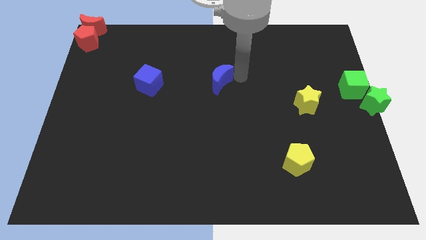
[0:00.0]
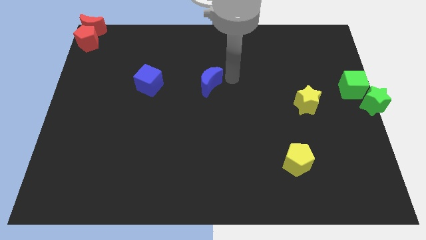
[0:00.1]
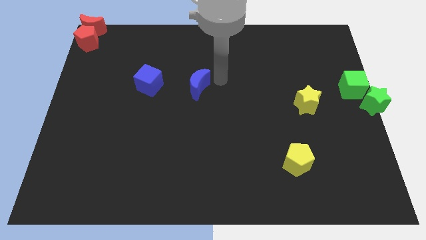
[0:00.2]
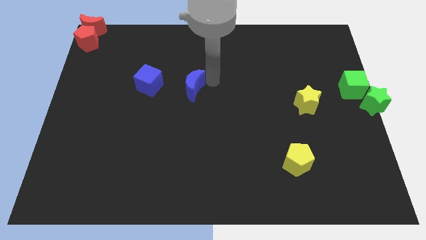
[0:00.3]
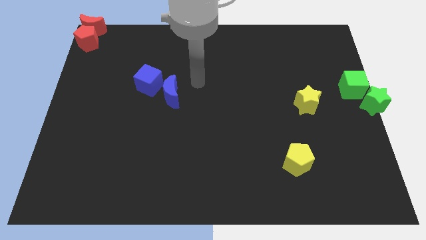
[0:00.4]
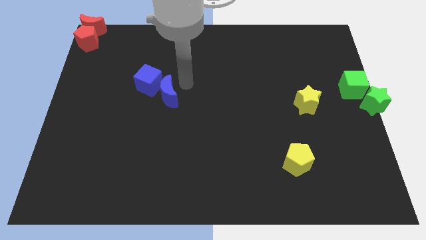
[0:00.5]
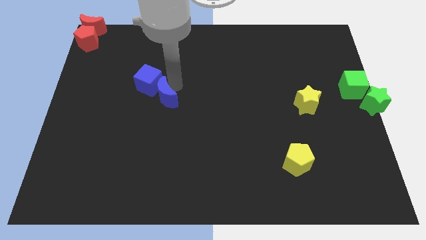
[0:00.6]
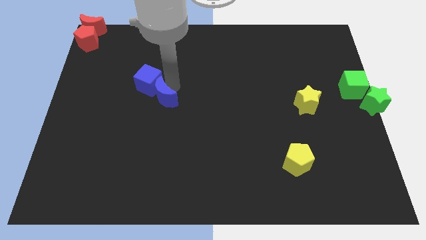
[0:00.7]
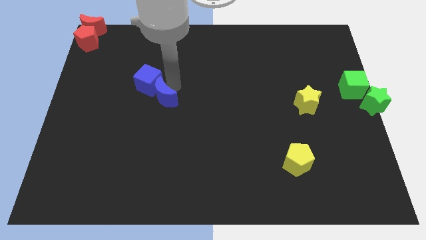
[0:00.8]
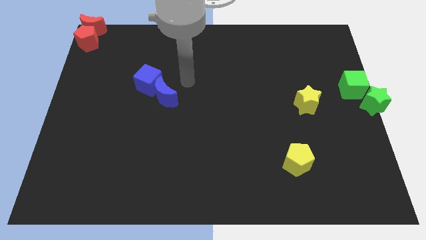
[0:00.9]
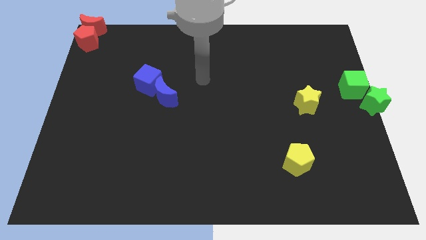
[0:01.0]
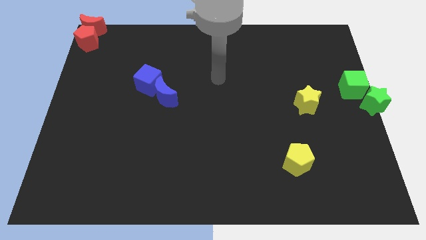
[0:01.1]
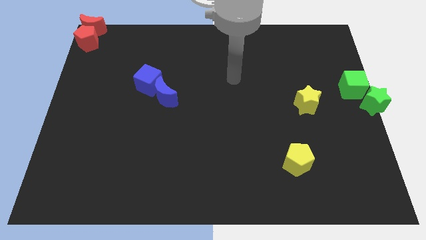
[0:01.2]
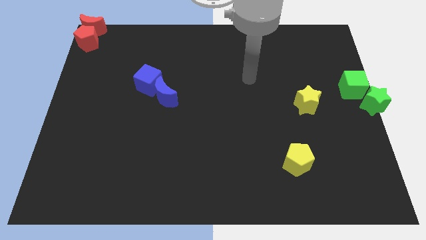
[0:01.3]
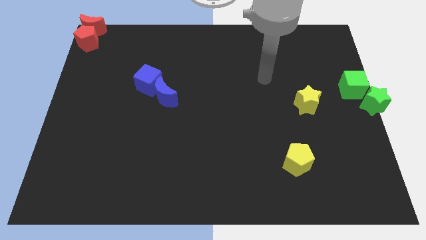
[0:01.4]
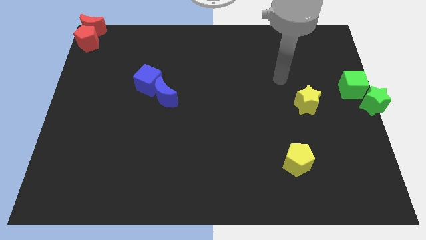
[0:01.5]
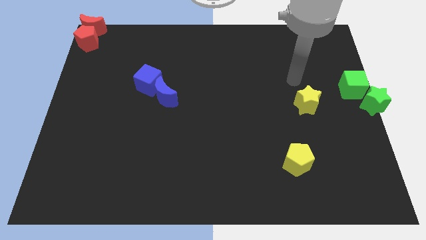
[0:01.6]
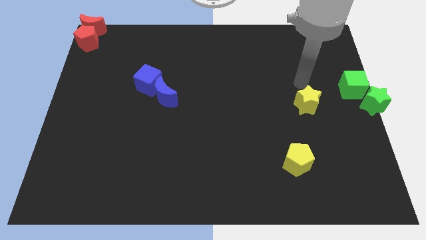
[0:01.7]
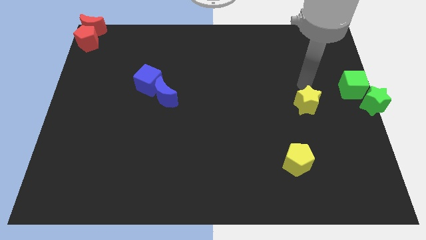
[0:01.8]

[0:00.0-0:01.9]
move the blue crescent towards the blue cube

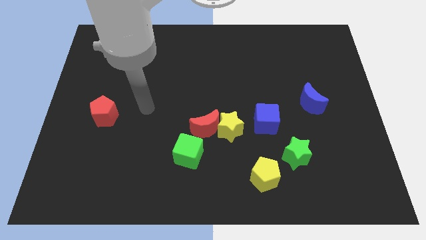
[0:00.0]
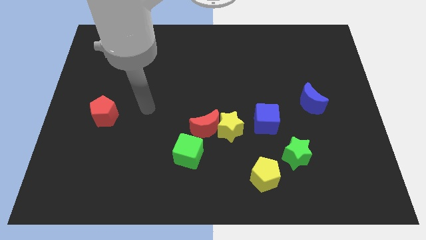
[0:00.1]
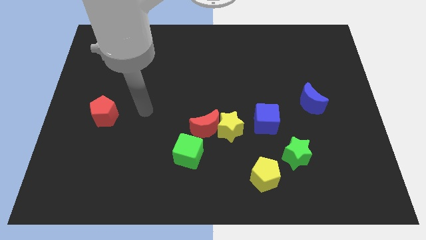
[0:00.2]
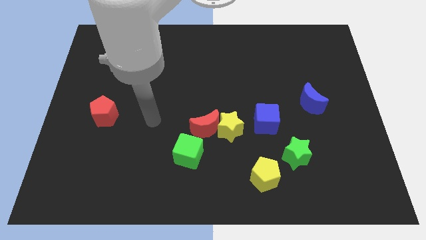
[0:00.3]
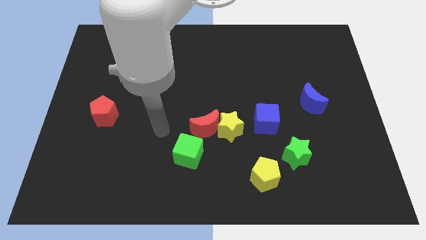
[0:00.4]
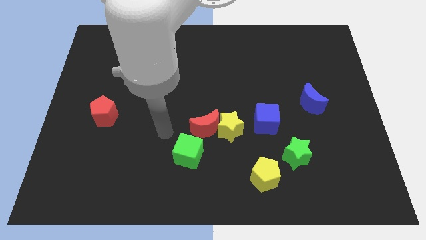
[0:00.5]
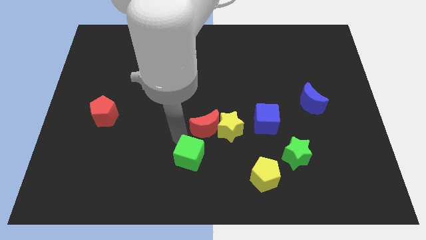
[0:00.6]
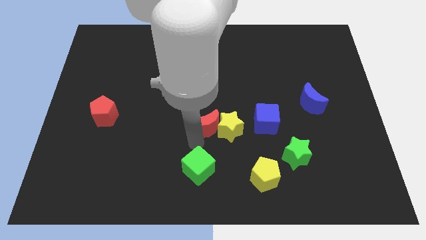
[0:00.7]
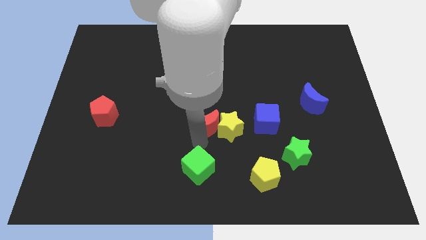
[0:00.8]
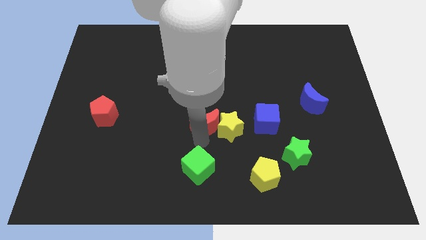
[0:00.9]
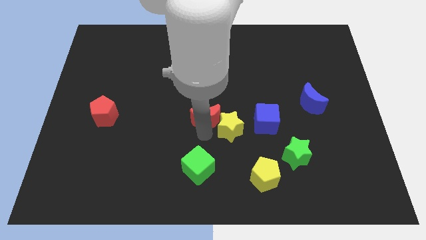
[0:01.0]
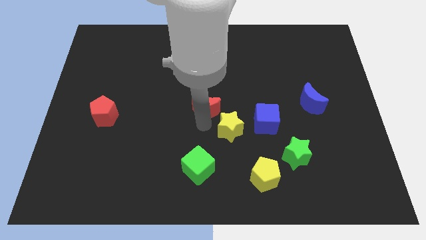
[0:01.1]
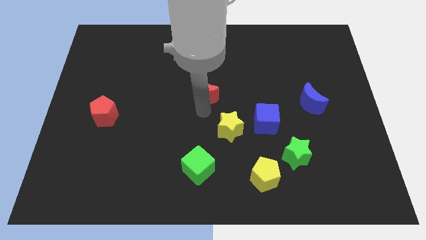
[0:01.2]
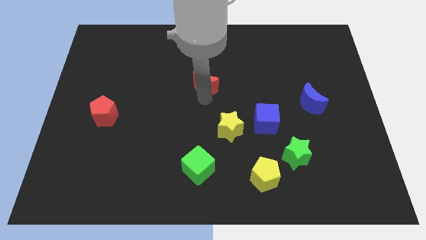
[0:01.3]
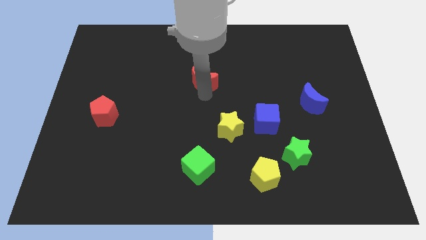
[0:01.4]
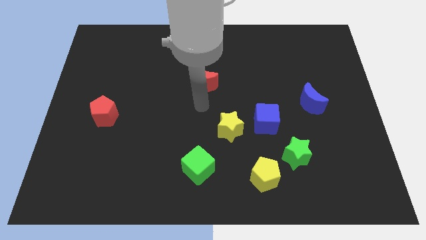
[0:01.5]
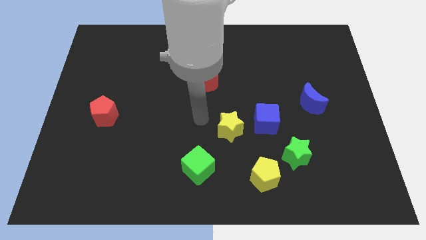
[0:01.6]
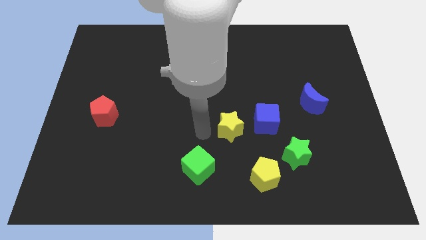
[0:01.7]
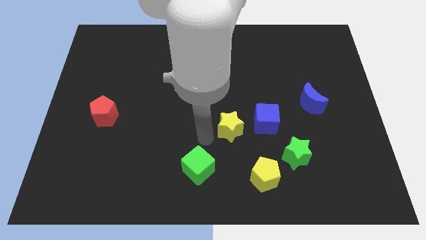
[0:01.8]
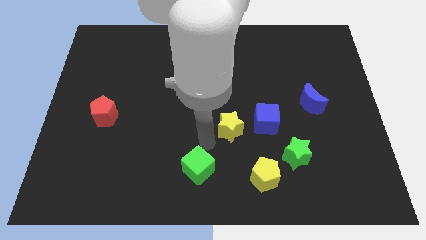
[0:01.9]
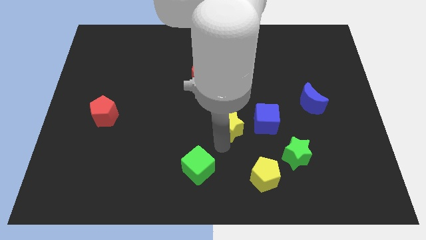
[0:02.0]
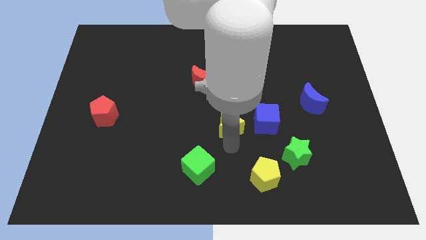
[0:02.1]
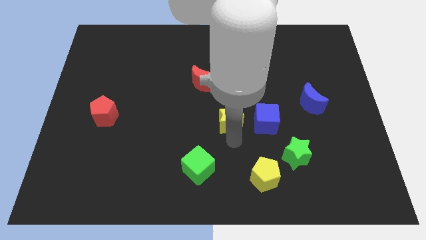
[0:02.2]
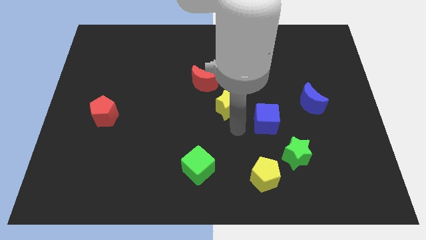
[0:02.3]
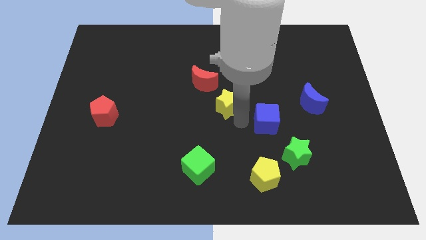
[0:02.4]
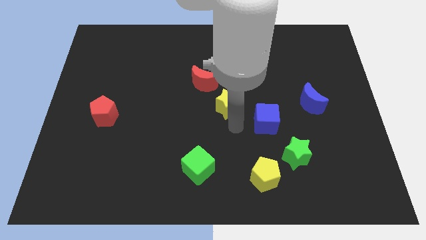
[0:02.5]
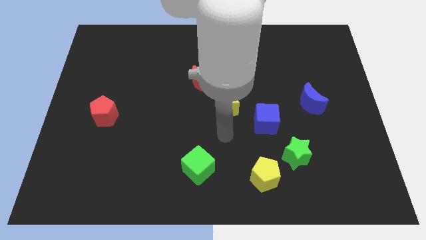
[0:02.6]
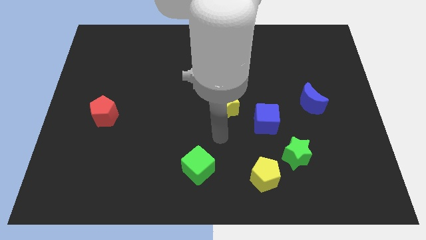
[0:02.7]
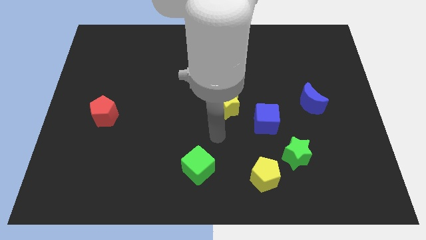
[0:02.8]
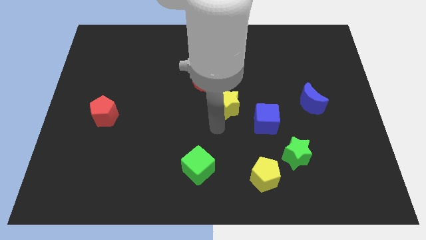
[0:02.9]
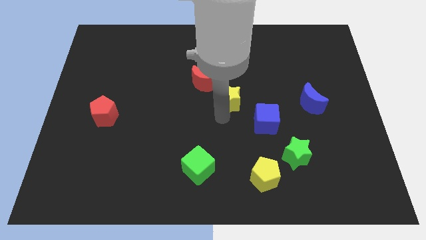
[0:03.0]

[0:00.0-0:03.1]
separate the red crescent and yellow star

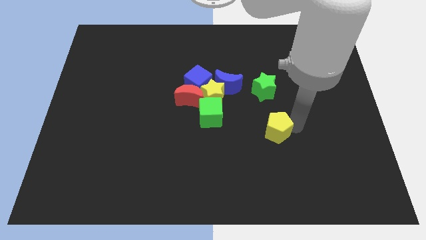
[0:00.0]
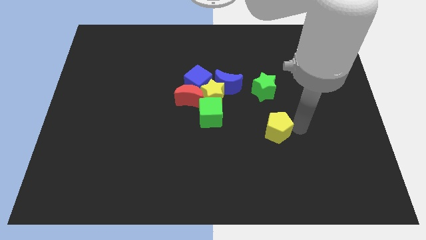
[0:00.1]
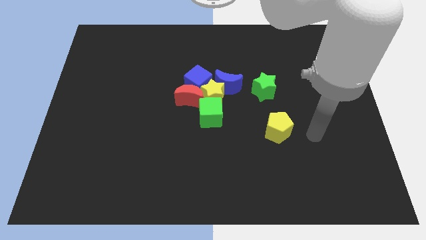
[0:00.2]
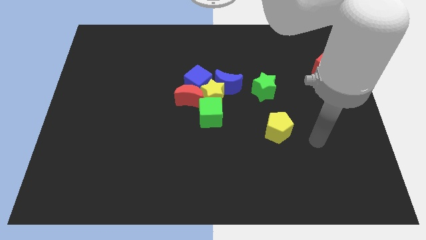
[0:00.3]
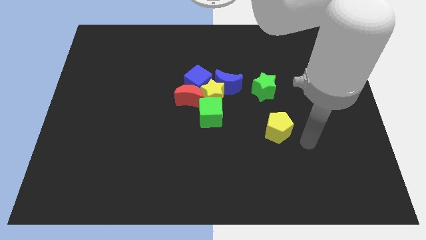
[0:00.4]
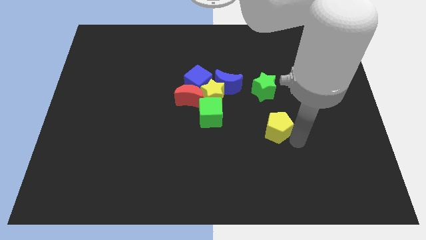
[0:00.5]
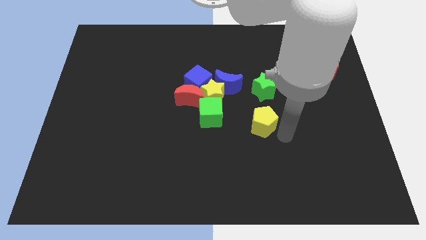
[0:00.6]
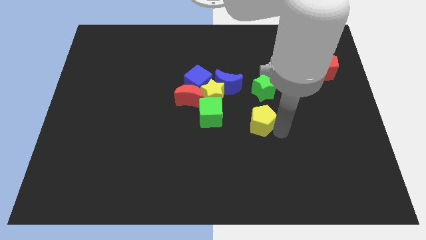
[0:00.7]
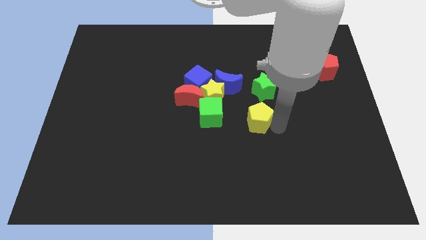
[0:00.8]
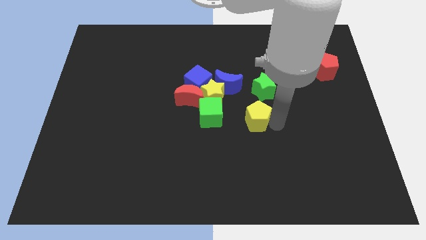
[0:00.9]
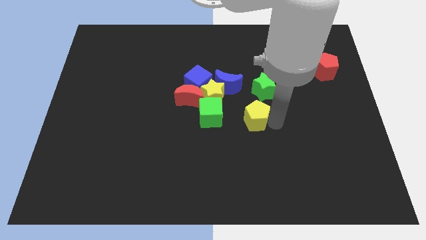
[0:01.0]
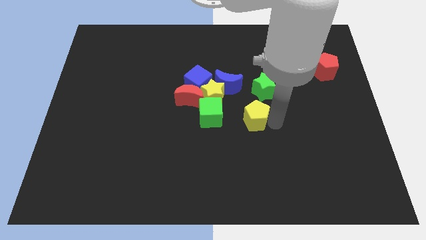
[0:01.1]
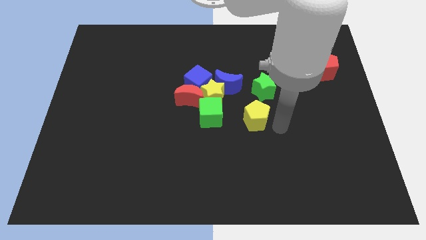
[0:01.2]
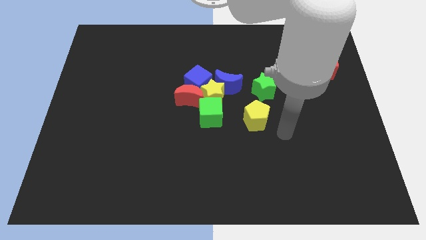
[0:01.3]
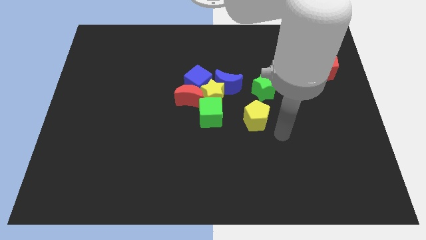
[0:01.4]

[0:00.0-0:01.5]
place the yellow pentagon to the right side of the green cube

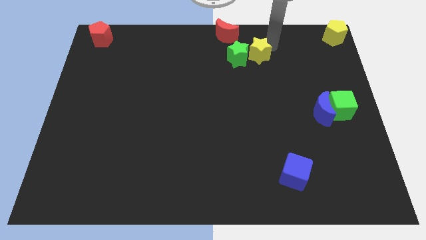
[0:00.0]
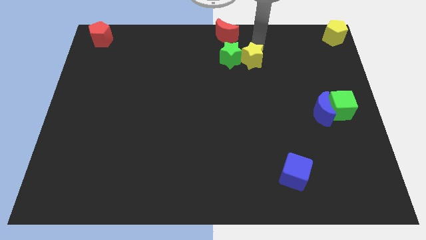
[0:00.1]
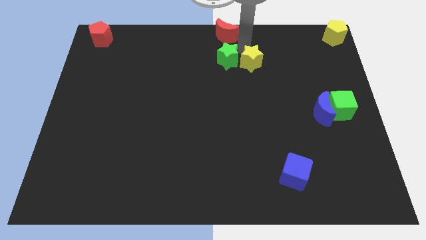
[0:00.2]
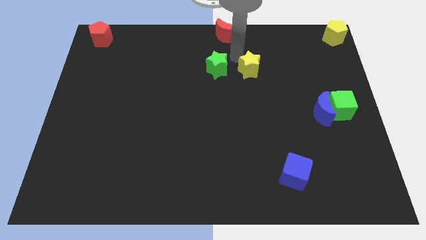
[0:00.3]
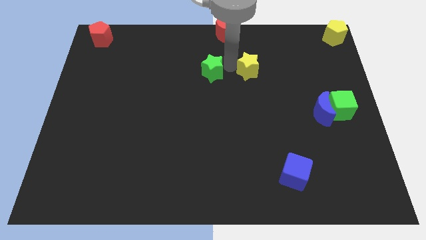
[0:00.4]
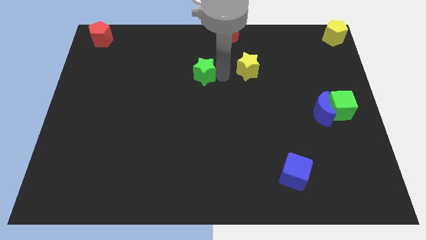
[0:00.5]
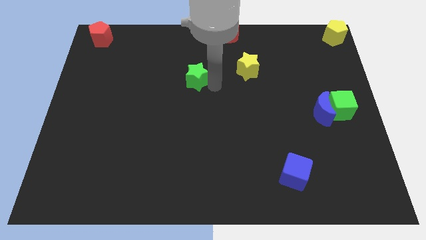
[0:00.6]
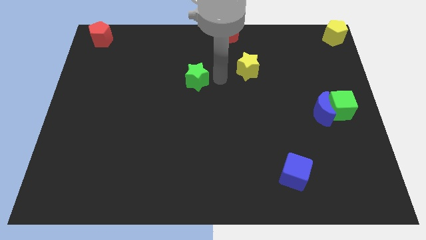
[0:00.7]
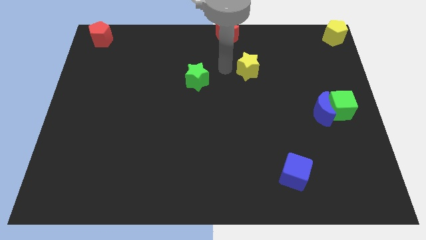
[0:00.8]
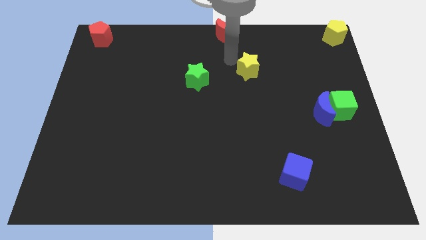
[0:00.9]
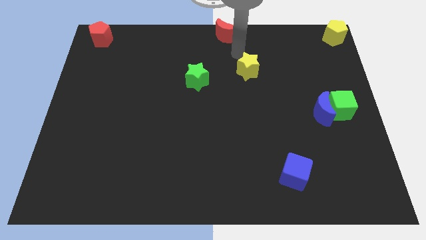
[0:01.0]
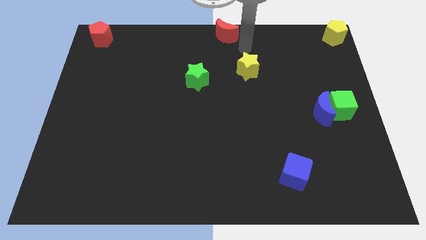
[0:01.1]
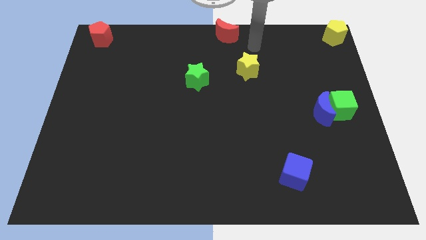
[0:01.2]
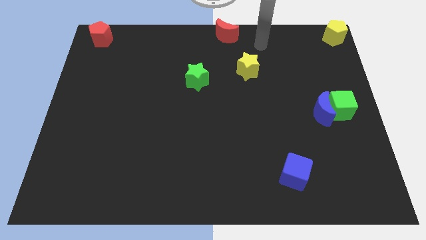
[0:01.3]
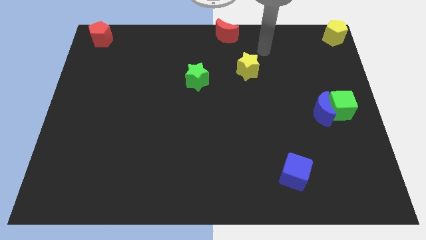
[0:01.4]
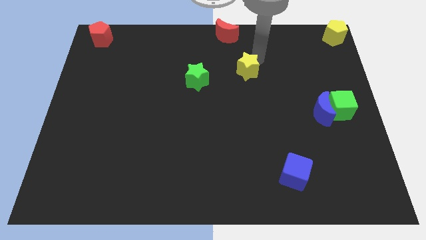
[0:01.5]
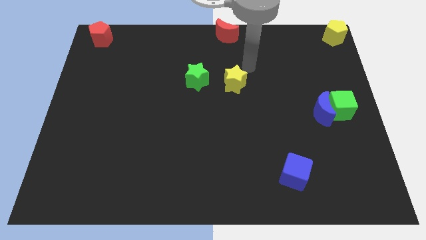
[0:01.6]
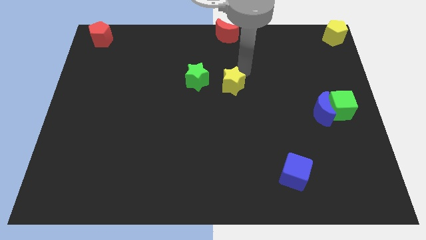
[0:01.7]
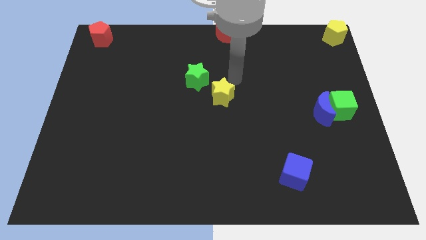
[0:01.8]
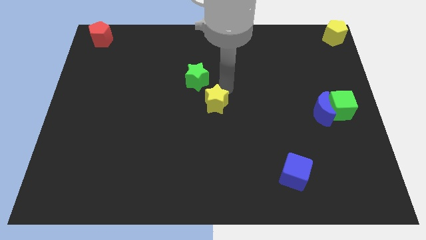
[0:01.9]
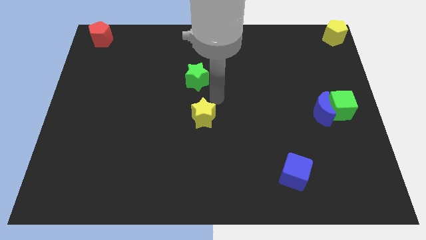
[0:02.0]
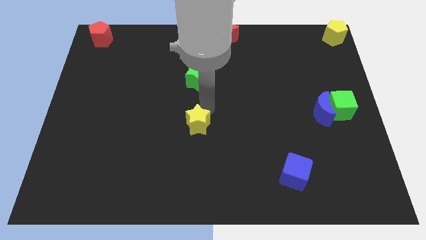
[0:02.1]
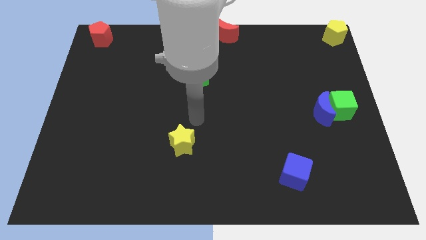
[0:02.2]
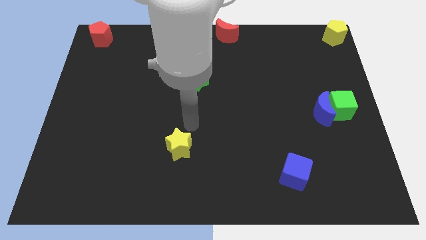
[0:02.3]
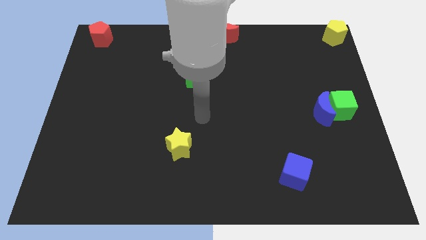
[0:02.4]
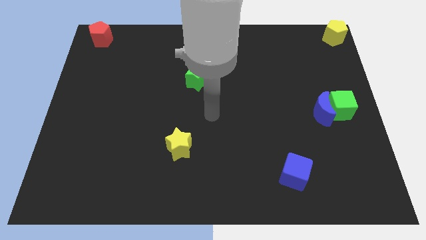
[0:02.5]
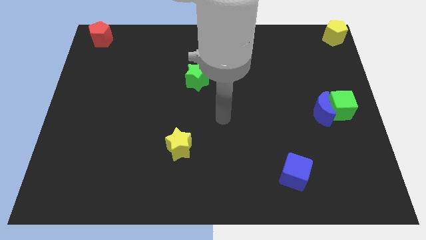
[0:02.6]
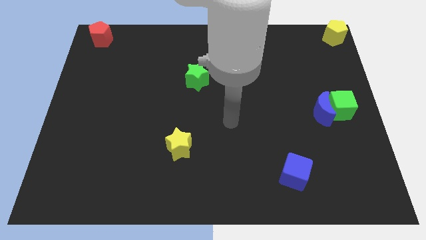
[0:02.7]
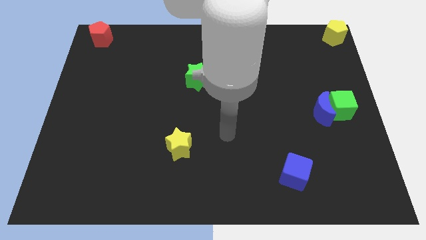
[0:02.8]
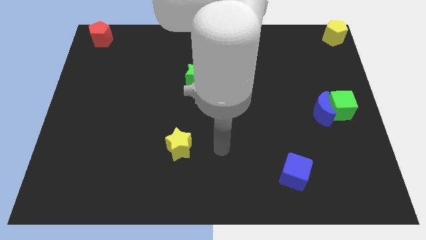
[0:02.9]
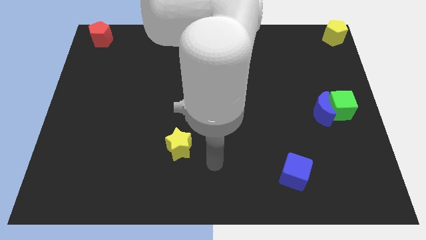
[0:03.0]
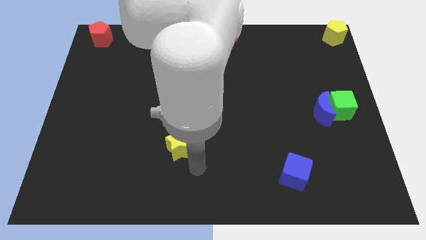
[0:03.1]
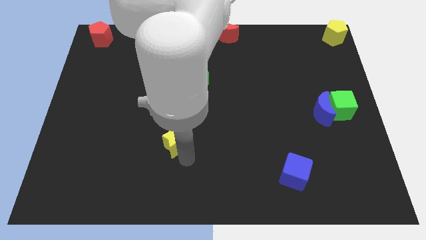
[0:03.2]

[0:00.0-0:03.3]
place the green star yellow star vertically
